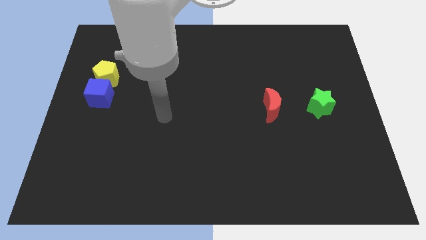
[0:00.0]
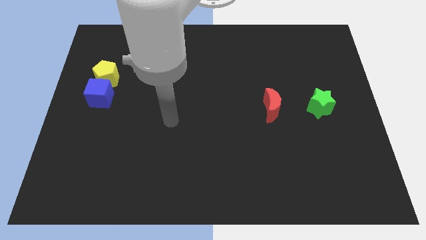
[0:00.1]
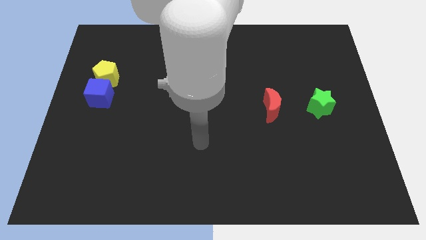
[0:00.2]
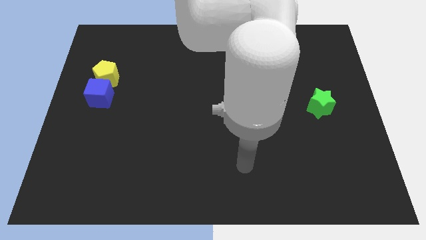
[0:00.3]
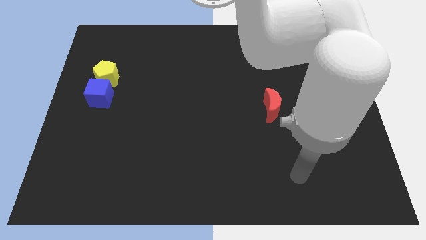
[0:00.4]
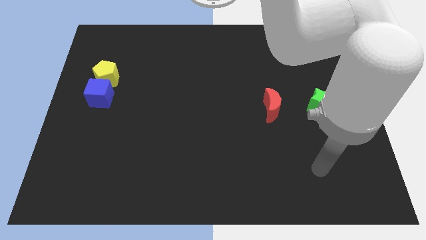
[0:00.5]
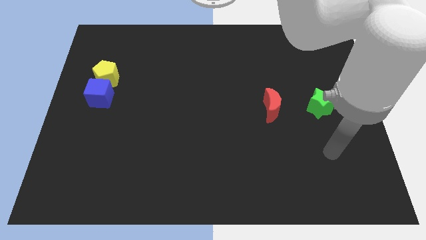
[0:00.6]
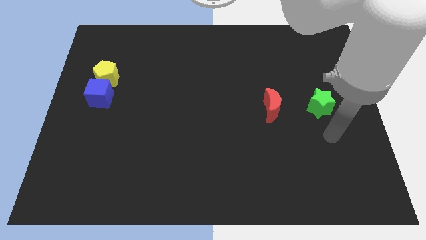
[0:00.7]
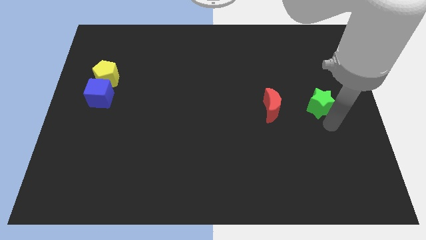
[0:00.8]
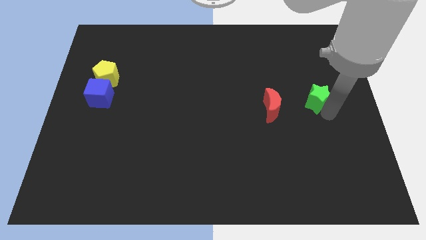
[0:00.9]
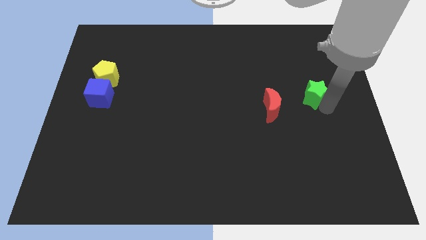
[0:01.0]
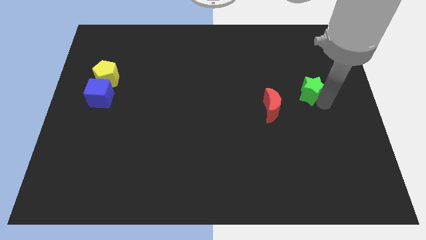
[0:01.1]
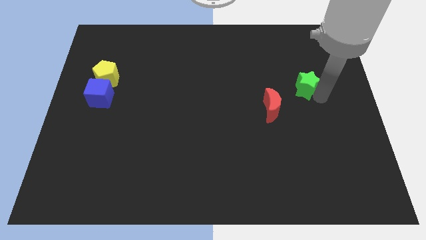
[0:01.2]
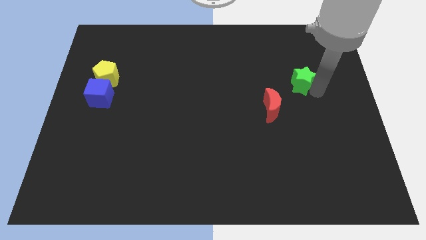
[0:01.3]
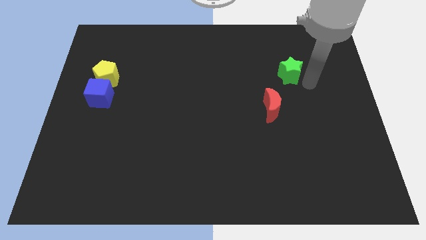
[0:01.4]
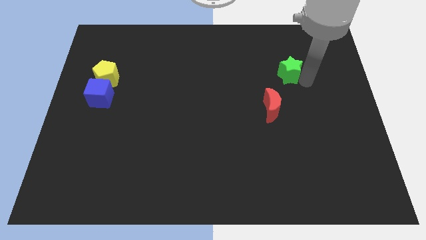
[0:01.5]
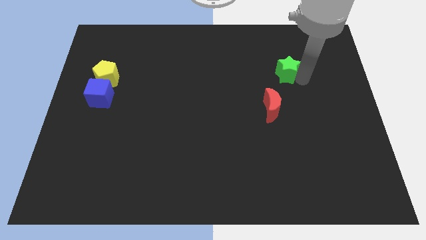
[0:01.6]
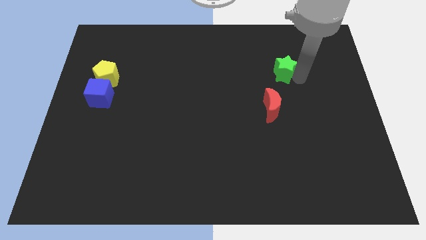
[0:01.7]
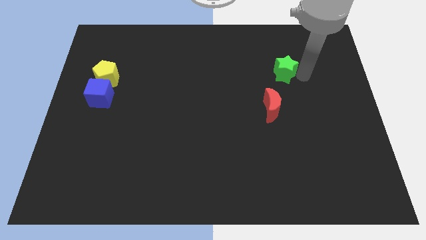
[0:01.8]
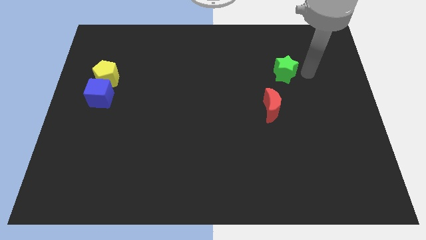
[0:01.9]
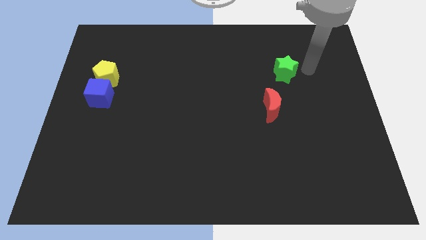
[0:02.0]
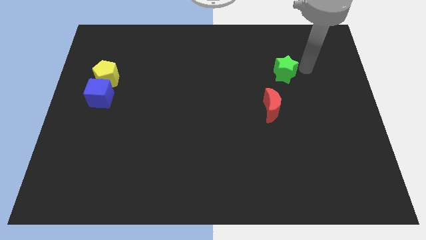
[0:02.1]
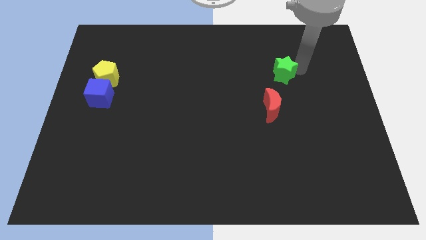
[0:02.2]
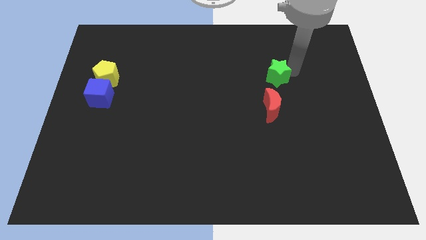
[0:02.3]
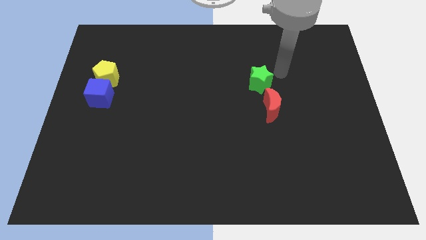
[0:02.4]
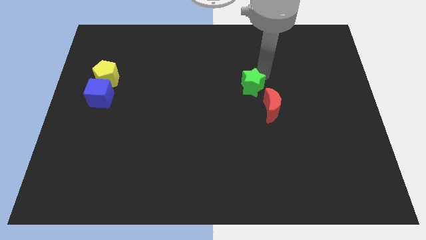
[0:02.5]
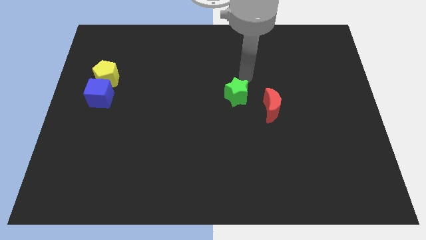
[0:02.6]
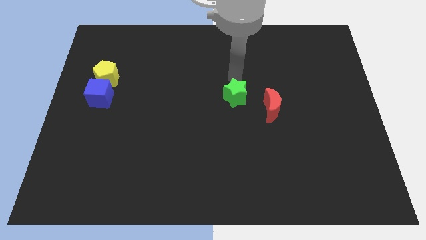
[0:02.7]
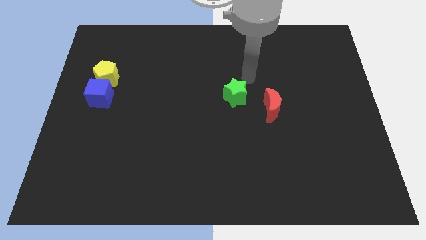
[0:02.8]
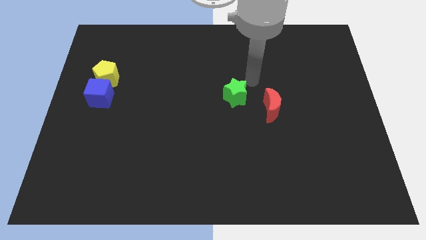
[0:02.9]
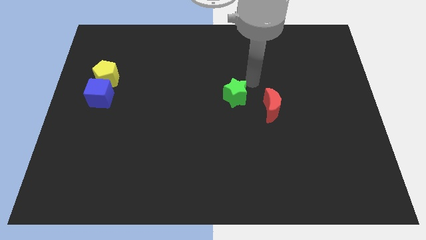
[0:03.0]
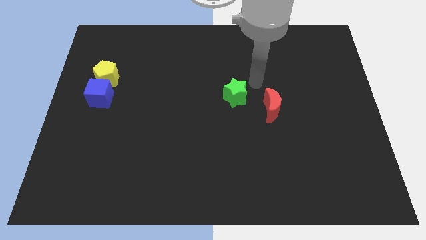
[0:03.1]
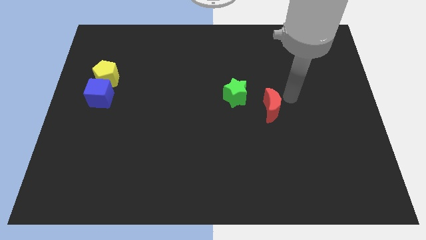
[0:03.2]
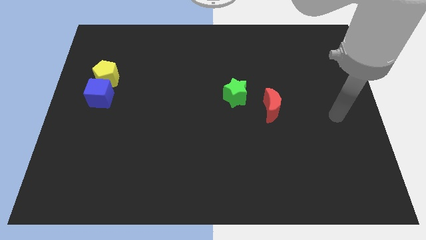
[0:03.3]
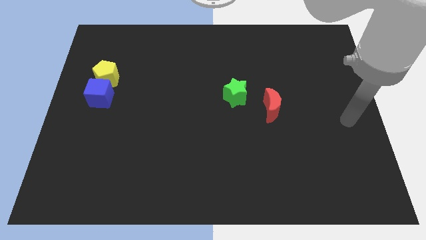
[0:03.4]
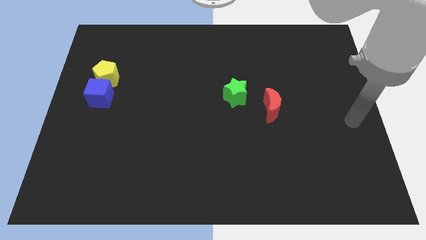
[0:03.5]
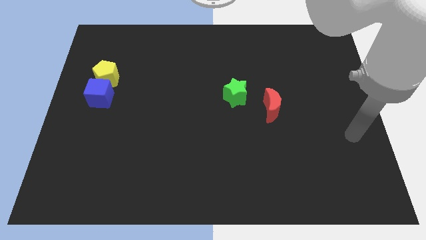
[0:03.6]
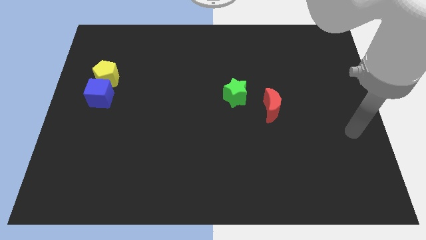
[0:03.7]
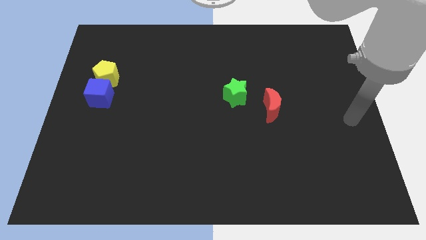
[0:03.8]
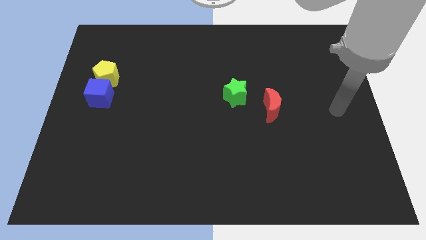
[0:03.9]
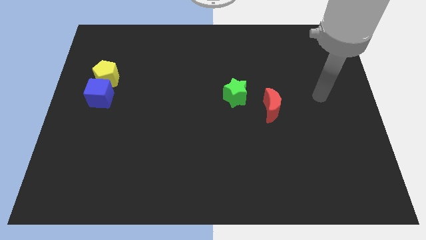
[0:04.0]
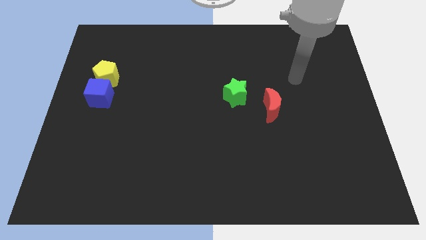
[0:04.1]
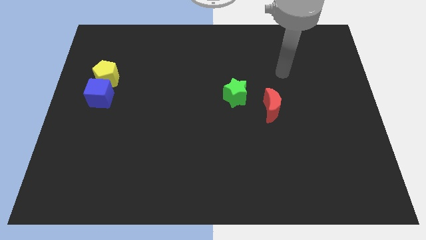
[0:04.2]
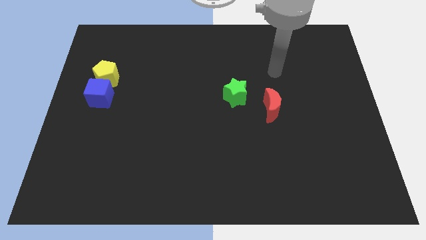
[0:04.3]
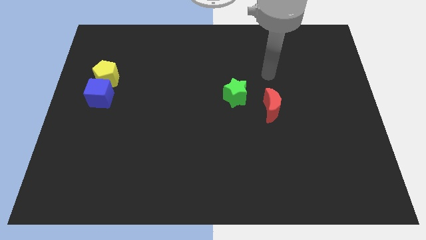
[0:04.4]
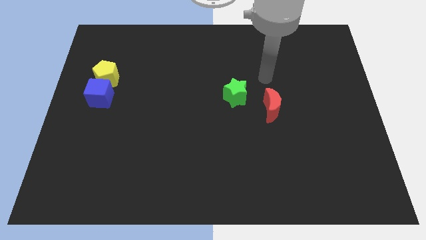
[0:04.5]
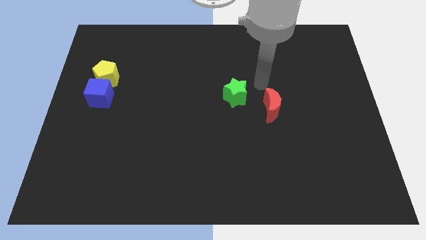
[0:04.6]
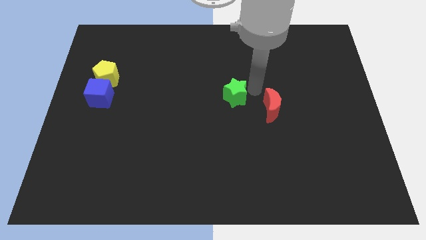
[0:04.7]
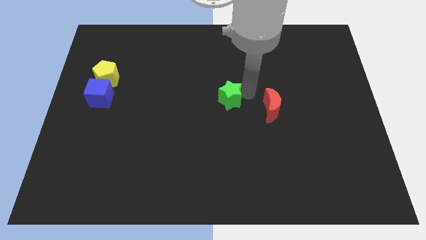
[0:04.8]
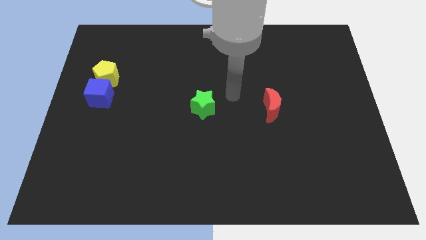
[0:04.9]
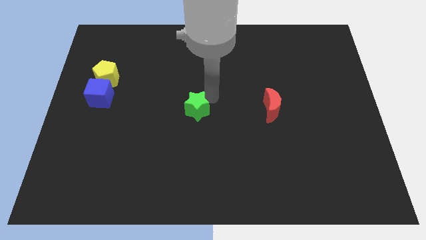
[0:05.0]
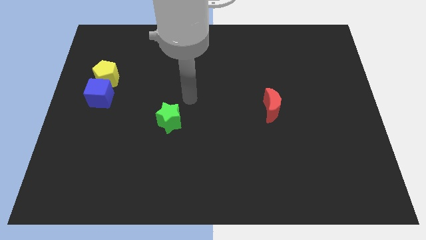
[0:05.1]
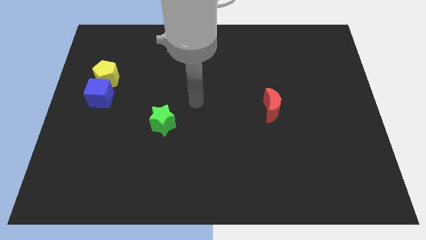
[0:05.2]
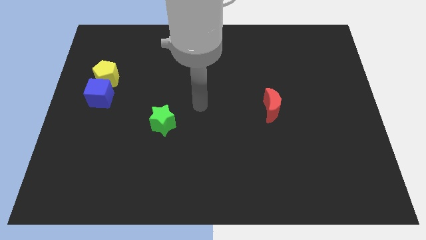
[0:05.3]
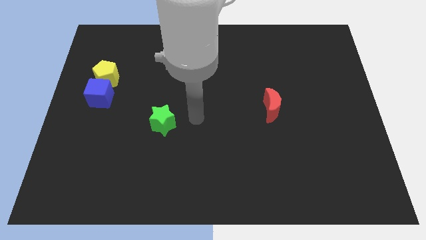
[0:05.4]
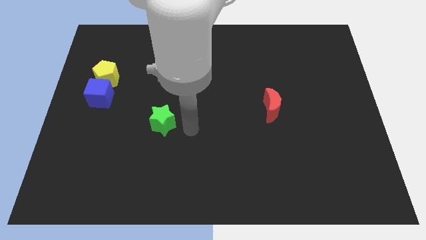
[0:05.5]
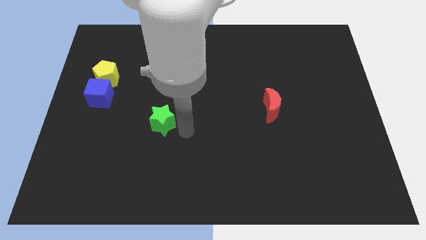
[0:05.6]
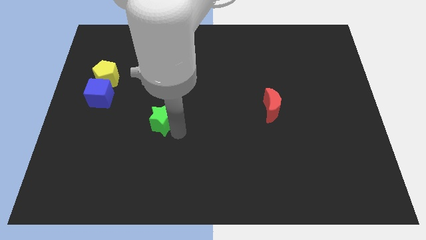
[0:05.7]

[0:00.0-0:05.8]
slide the green star close to the cube

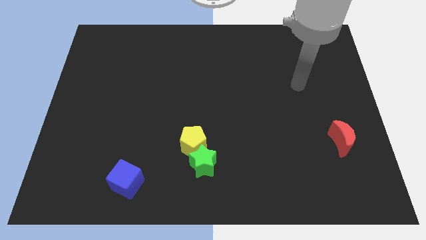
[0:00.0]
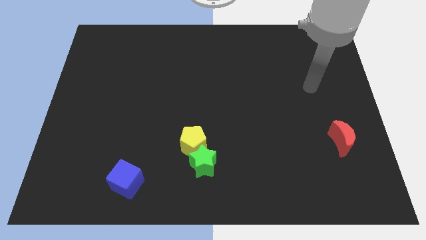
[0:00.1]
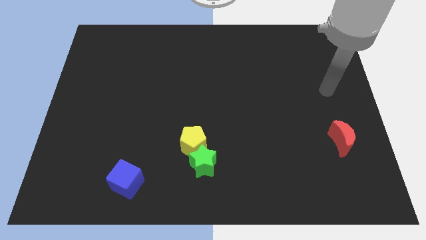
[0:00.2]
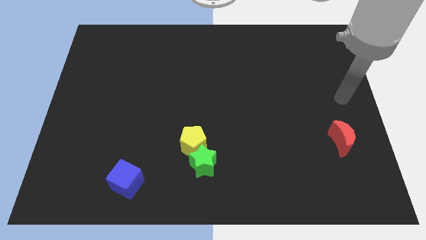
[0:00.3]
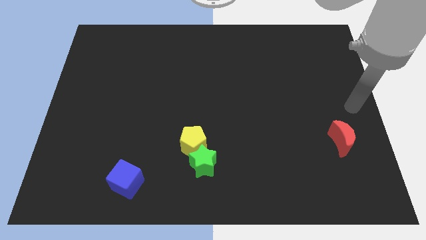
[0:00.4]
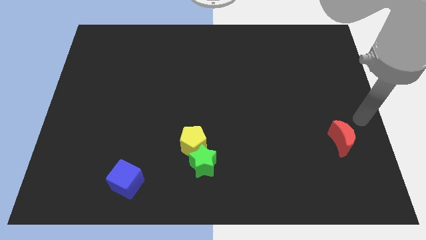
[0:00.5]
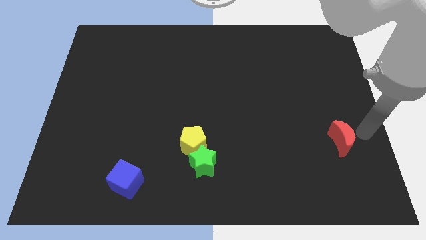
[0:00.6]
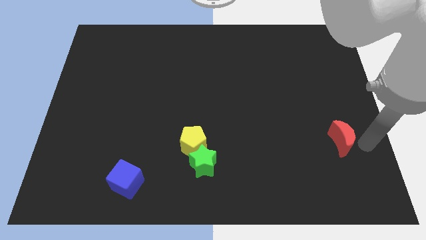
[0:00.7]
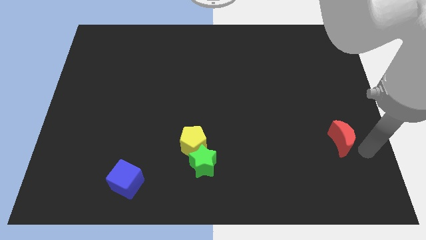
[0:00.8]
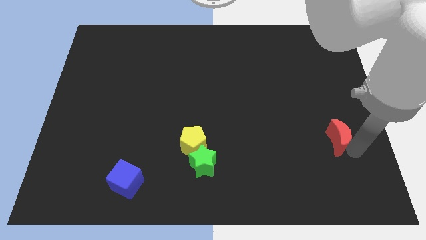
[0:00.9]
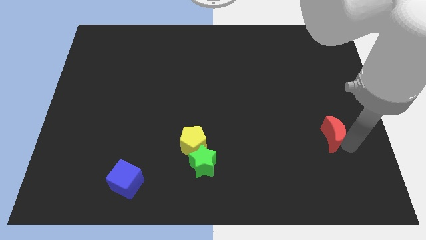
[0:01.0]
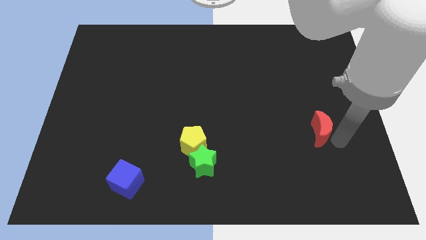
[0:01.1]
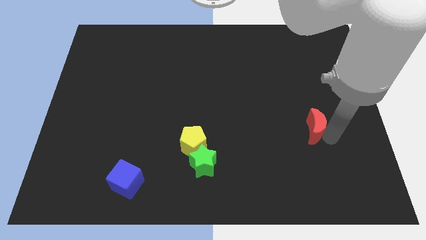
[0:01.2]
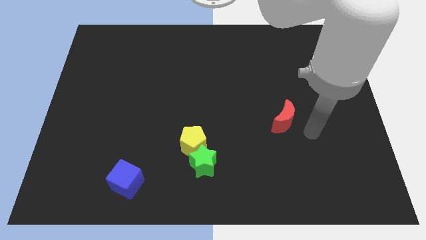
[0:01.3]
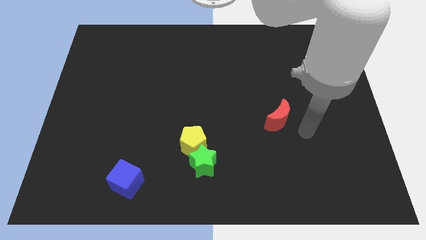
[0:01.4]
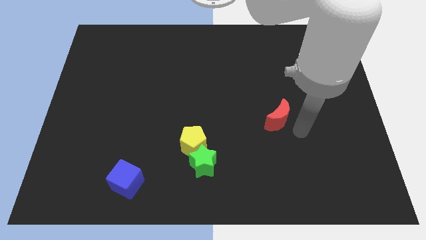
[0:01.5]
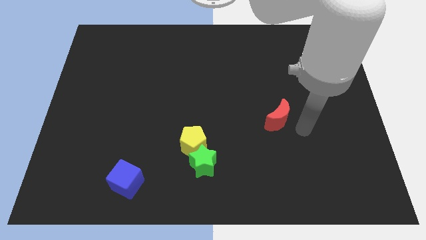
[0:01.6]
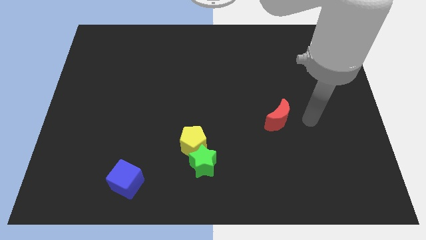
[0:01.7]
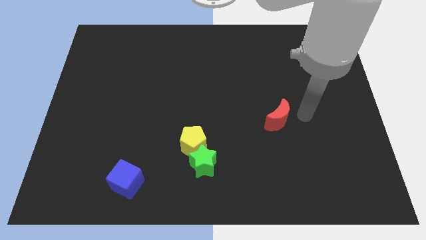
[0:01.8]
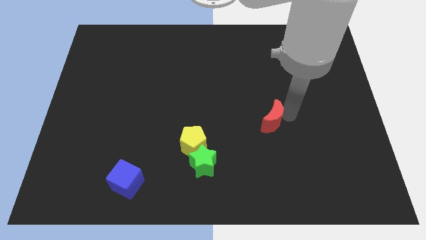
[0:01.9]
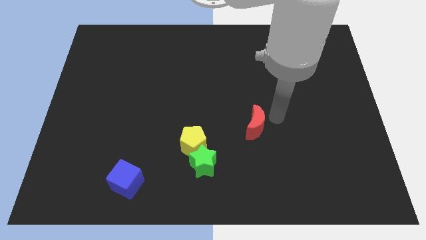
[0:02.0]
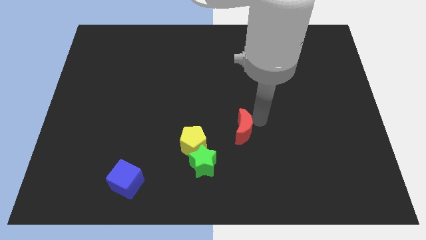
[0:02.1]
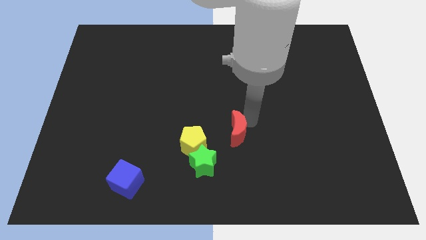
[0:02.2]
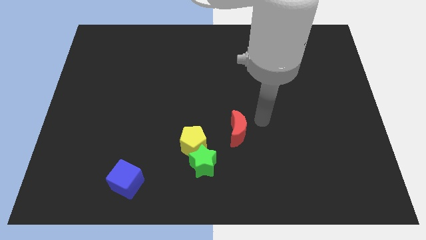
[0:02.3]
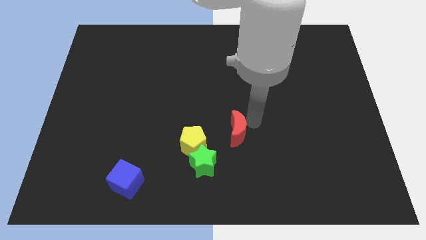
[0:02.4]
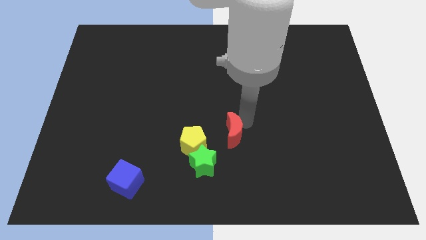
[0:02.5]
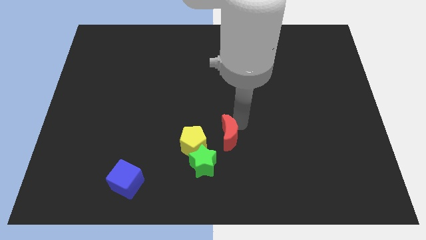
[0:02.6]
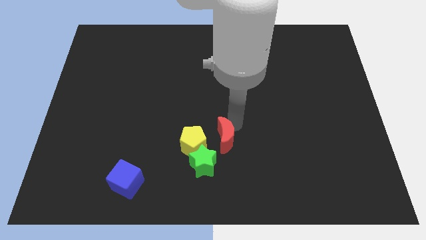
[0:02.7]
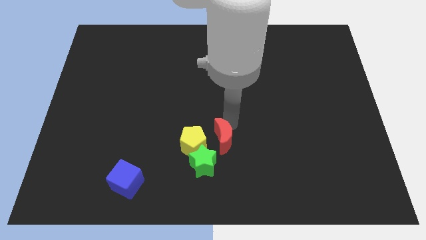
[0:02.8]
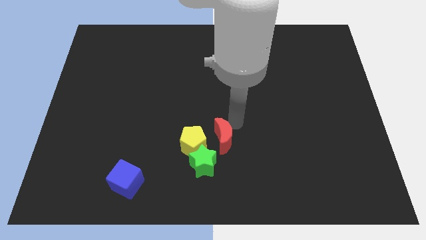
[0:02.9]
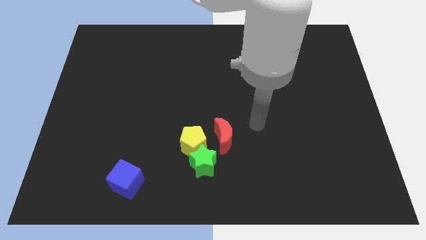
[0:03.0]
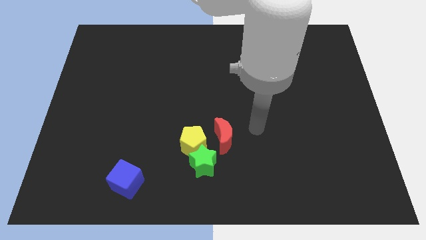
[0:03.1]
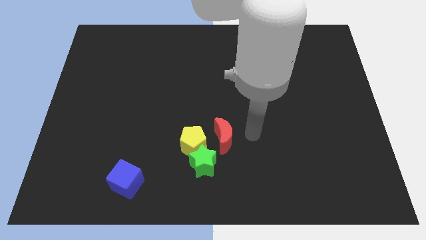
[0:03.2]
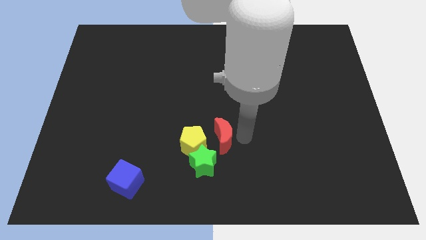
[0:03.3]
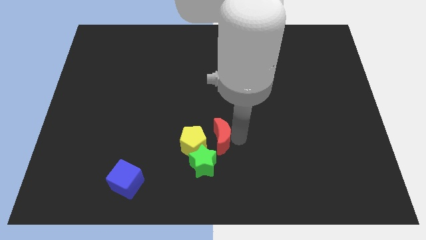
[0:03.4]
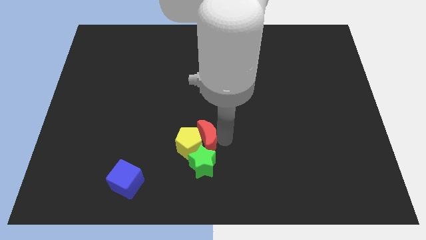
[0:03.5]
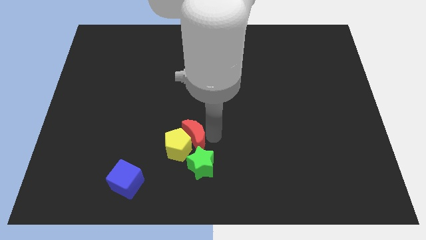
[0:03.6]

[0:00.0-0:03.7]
put the red block next to the pentagon
